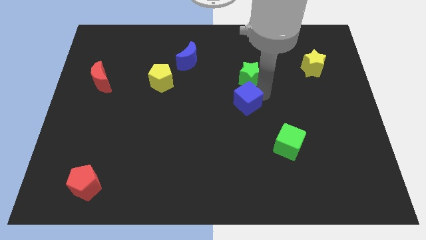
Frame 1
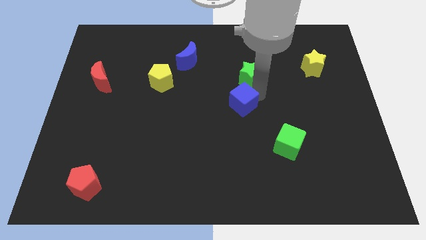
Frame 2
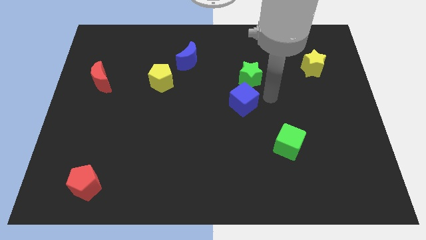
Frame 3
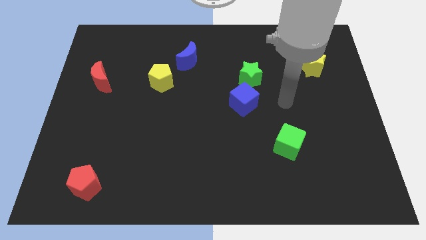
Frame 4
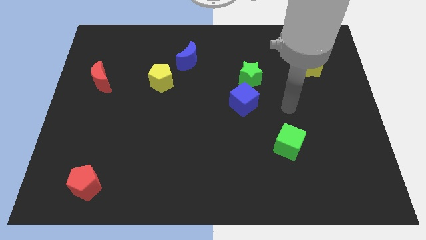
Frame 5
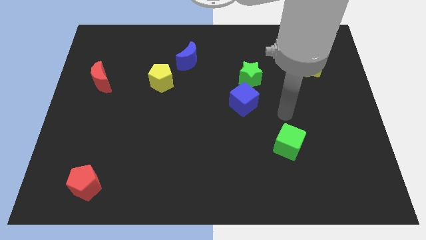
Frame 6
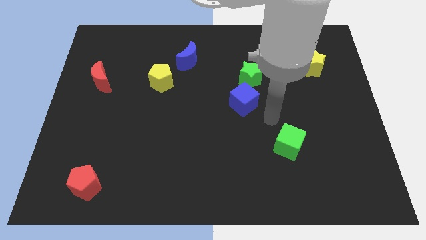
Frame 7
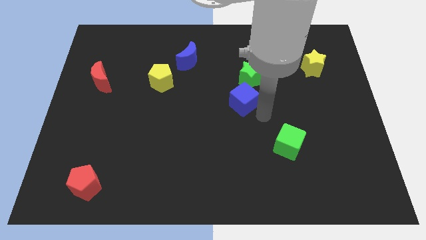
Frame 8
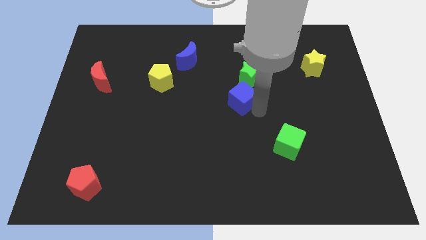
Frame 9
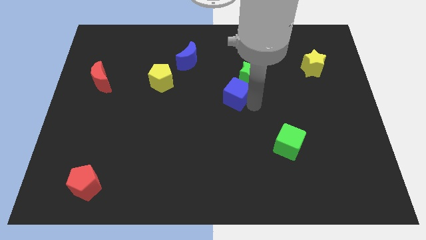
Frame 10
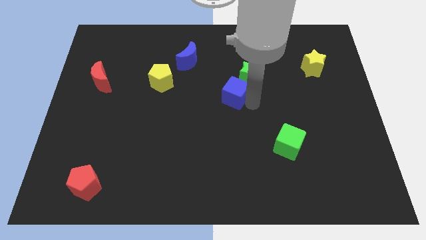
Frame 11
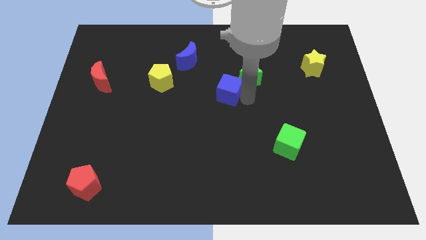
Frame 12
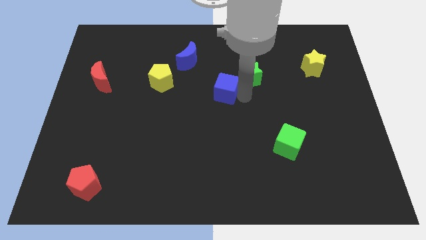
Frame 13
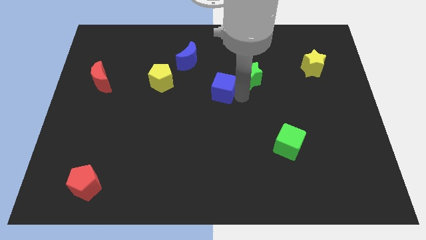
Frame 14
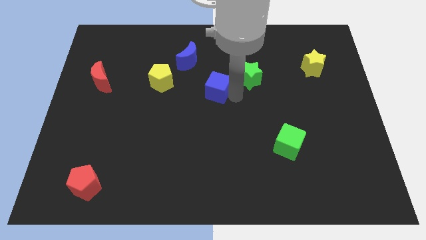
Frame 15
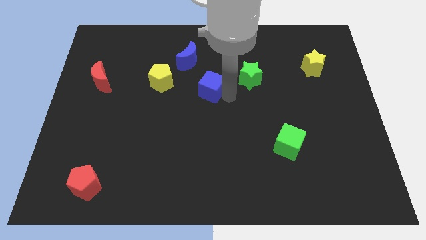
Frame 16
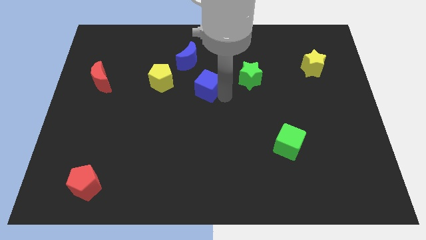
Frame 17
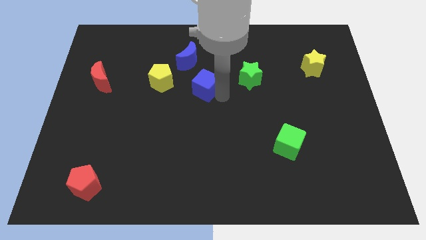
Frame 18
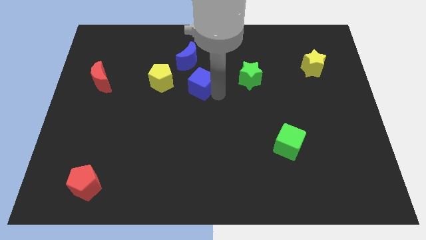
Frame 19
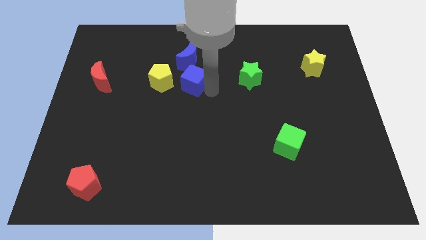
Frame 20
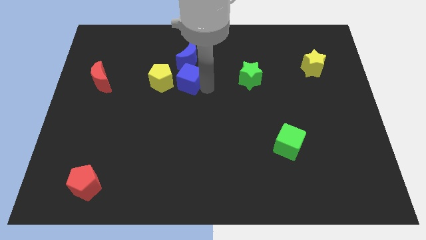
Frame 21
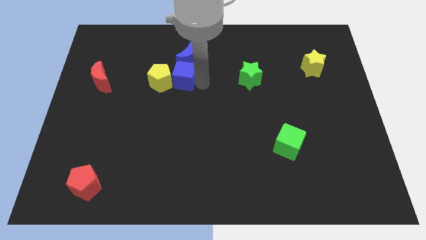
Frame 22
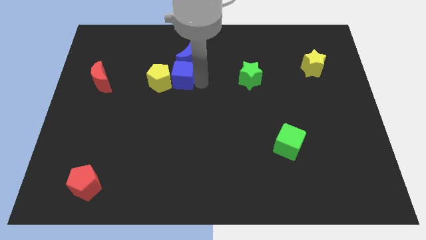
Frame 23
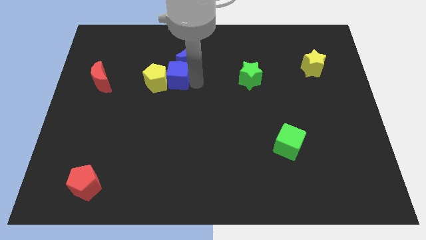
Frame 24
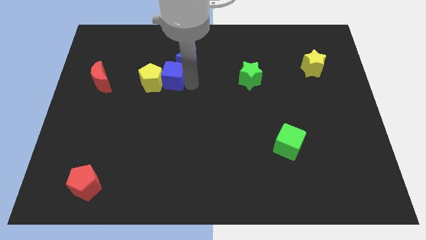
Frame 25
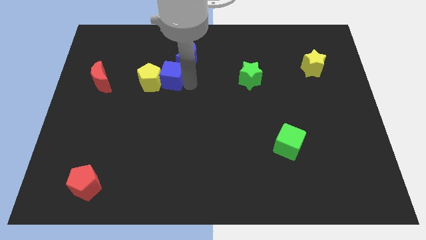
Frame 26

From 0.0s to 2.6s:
move blue cube into yellow pentagon

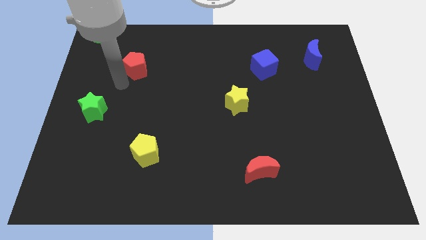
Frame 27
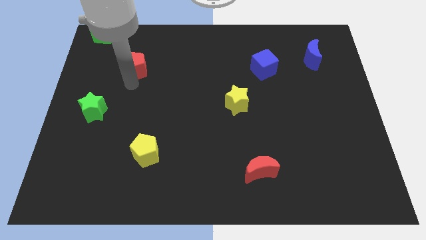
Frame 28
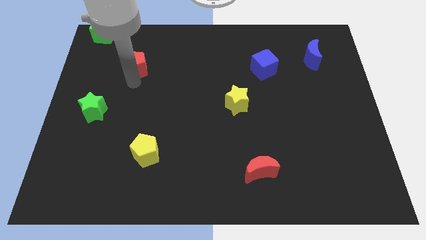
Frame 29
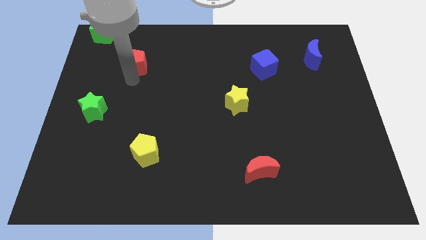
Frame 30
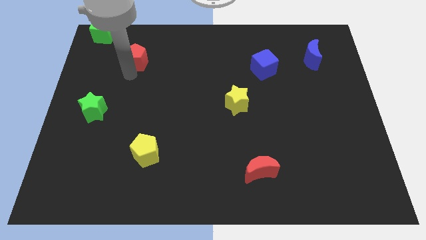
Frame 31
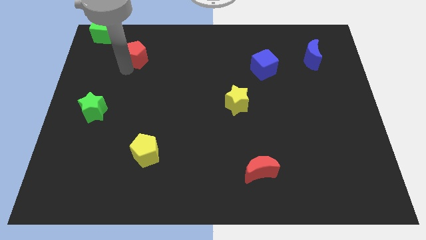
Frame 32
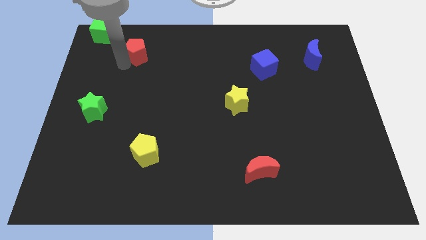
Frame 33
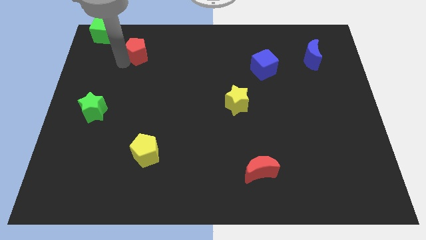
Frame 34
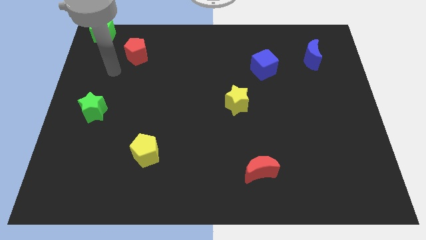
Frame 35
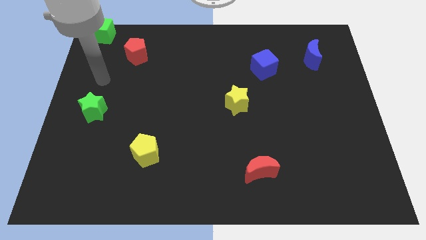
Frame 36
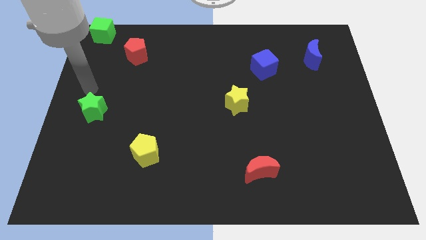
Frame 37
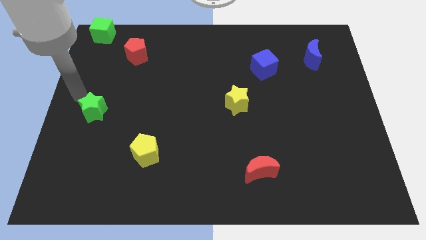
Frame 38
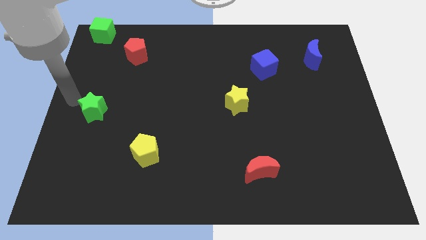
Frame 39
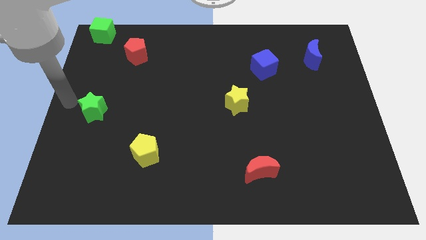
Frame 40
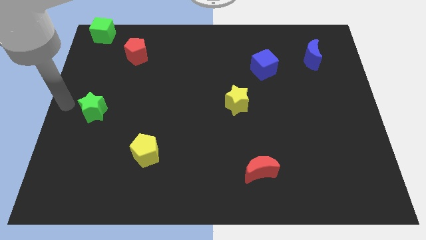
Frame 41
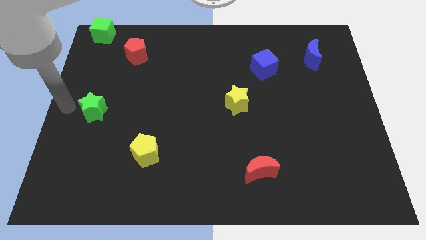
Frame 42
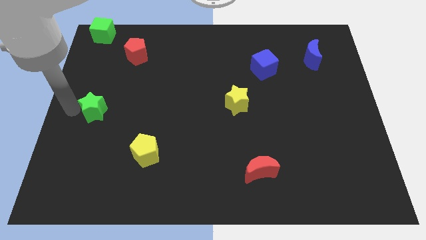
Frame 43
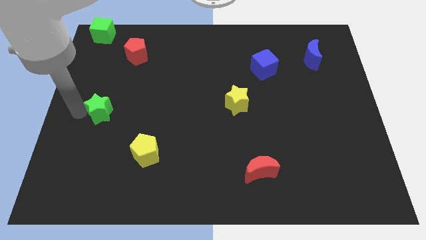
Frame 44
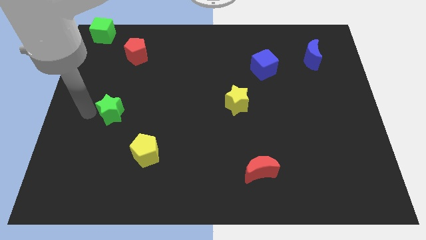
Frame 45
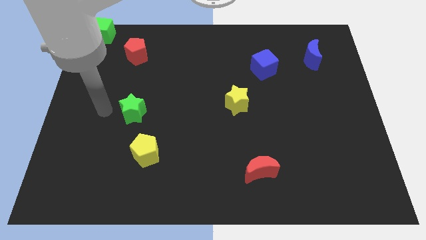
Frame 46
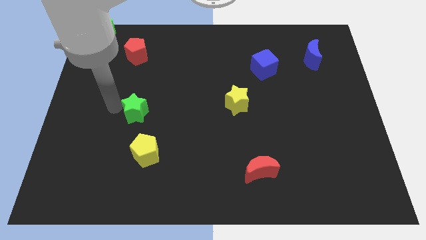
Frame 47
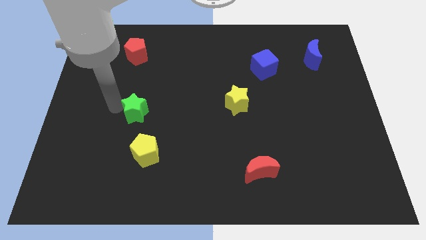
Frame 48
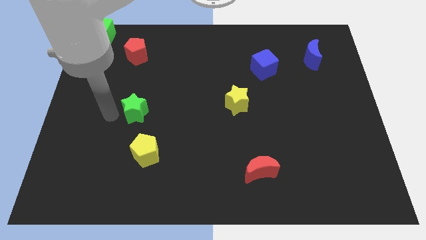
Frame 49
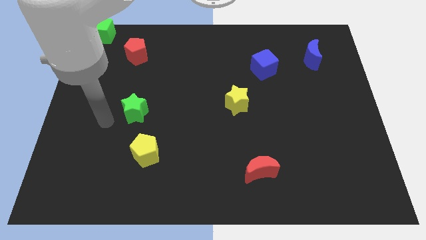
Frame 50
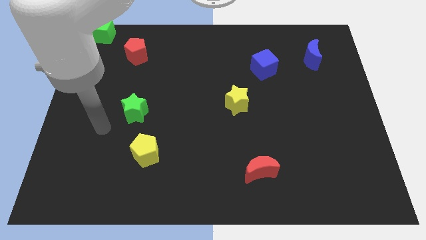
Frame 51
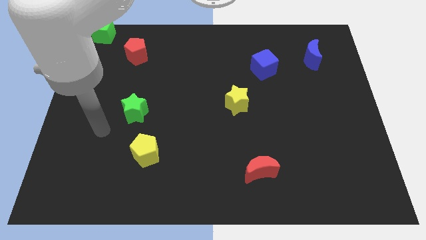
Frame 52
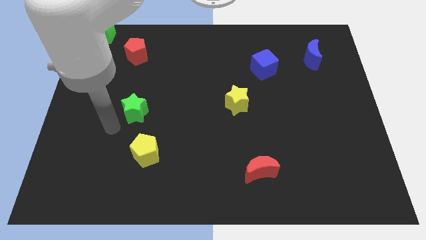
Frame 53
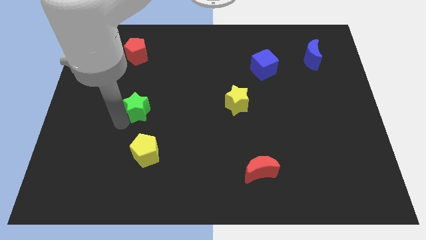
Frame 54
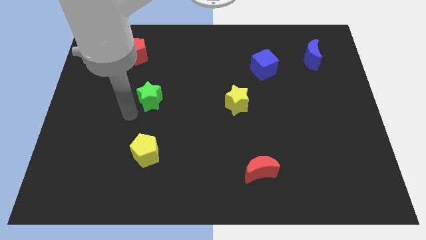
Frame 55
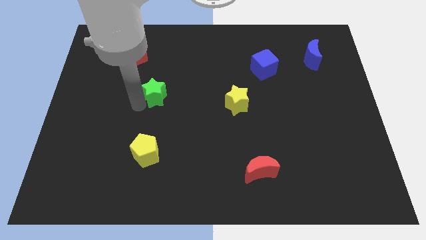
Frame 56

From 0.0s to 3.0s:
place green star vertically above yellow pentagon

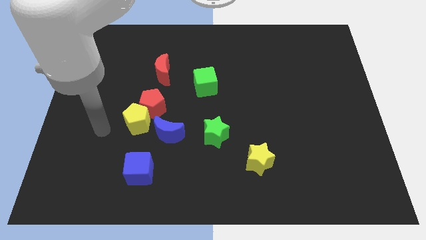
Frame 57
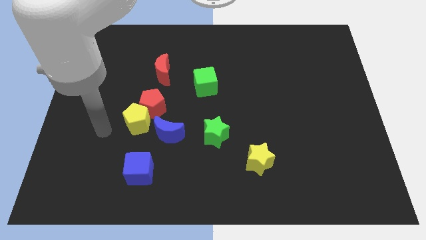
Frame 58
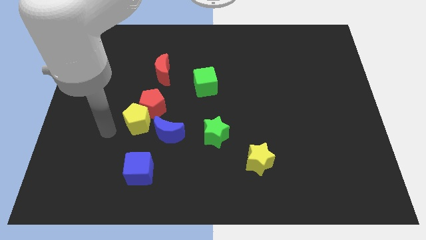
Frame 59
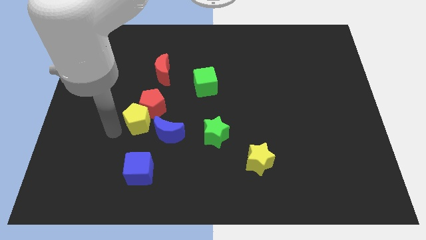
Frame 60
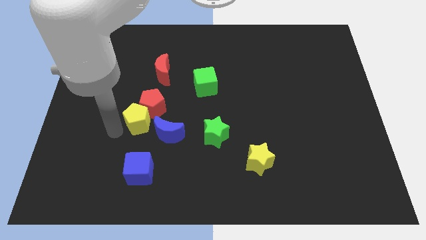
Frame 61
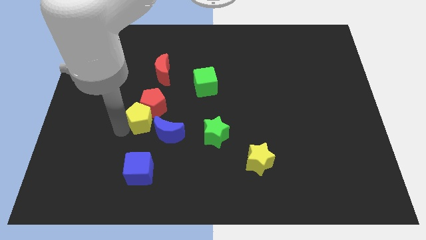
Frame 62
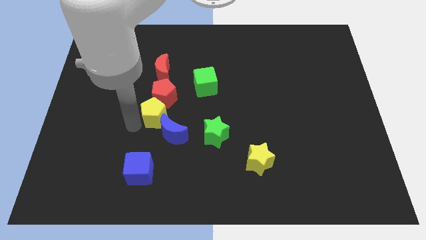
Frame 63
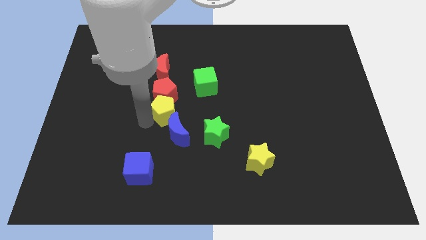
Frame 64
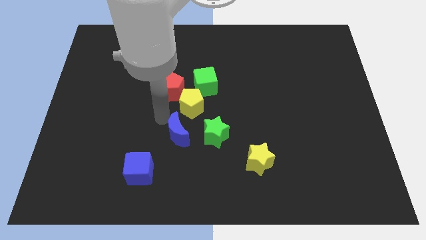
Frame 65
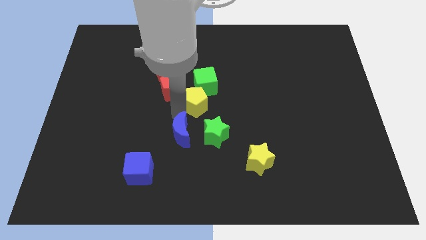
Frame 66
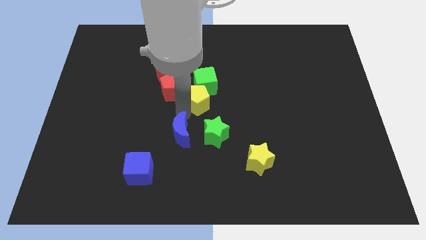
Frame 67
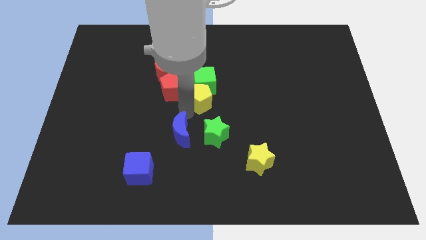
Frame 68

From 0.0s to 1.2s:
move yellow pentagon bottom left of the green cube

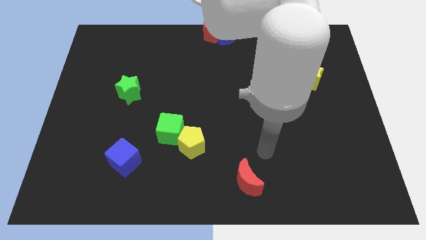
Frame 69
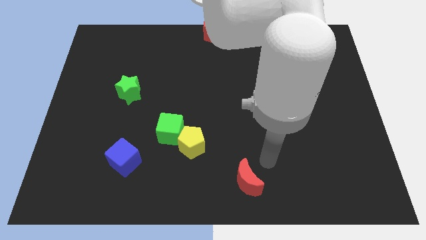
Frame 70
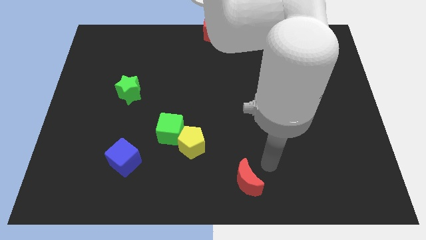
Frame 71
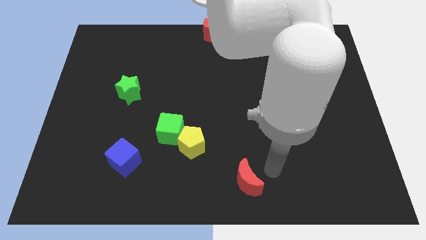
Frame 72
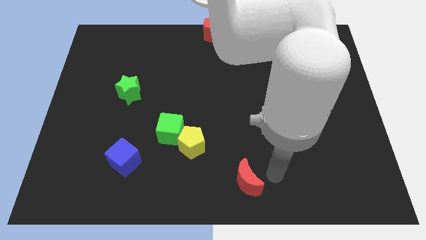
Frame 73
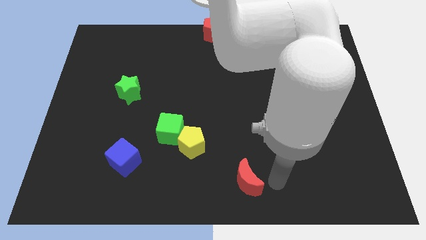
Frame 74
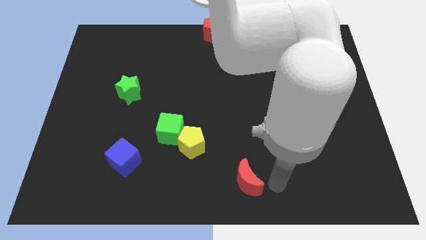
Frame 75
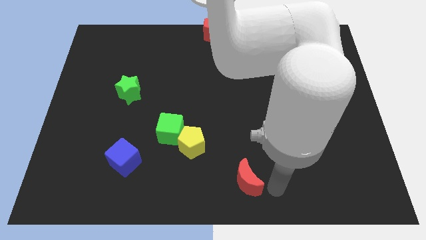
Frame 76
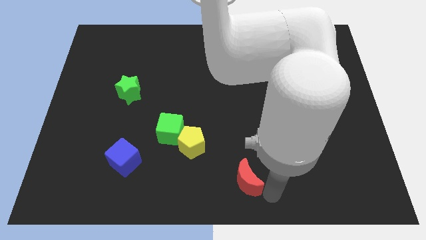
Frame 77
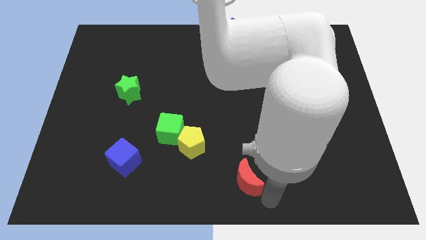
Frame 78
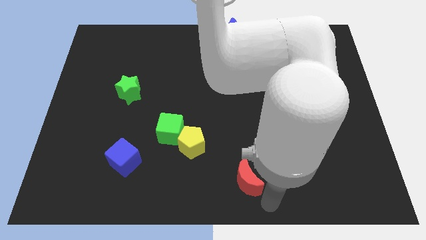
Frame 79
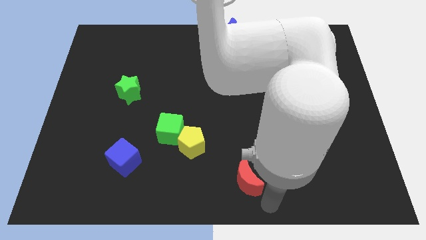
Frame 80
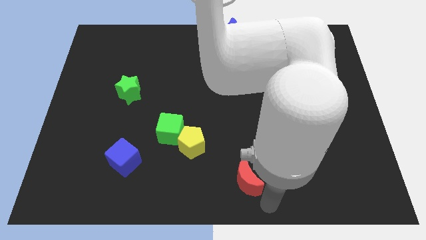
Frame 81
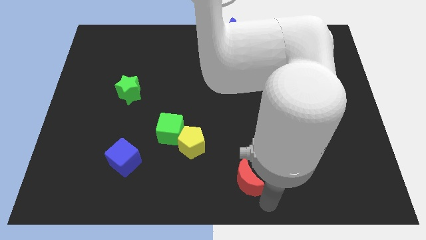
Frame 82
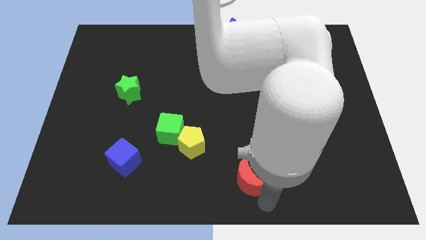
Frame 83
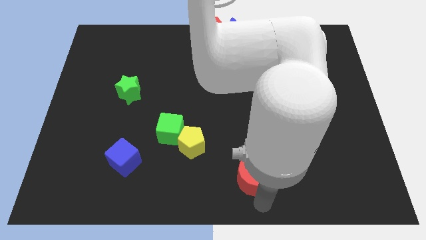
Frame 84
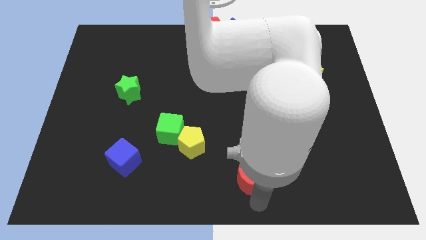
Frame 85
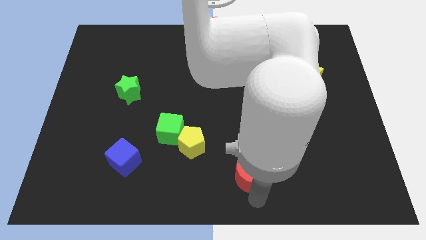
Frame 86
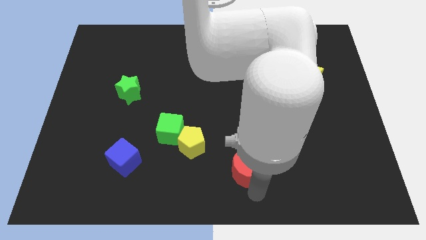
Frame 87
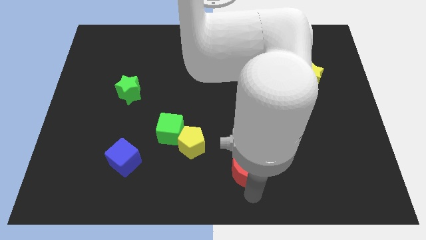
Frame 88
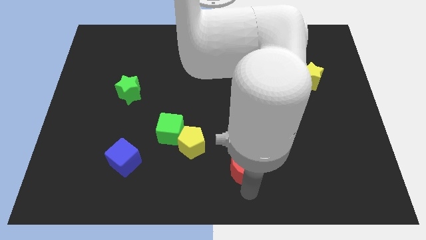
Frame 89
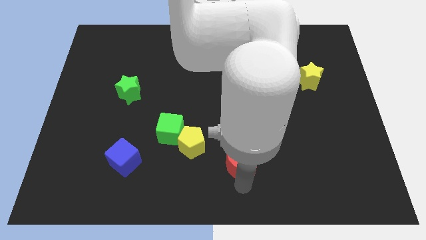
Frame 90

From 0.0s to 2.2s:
slightly move the red moon towards up
